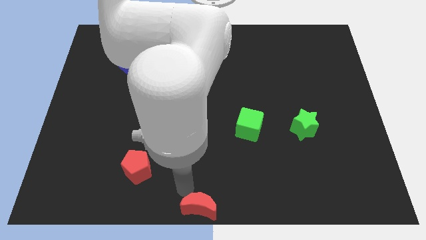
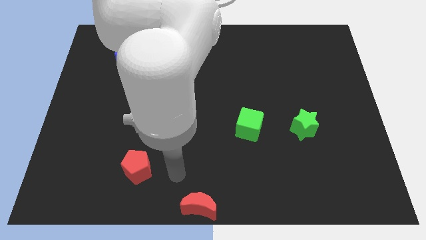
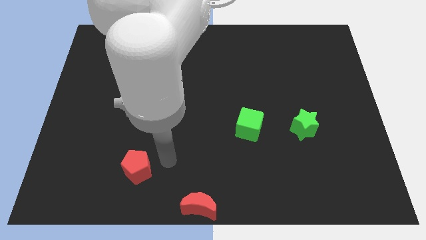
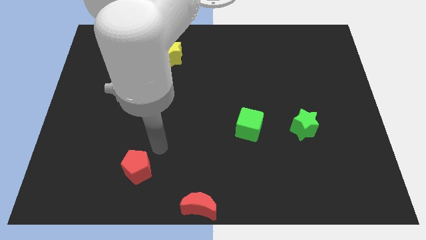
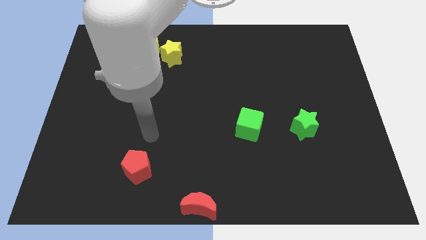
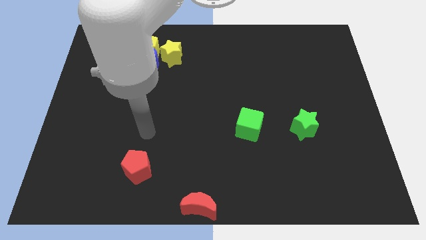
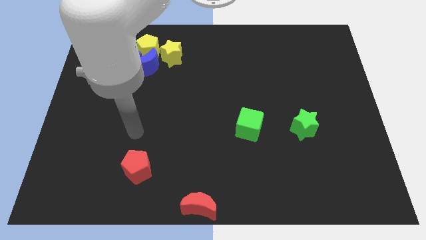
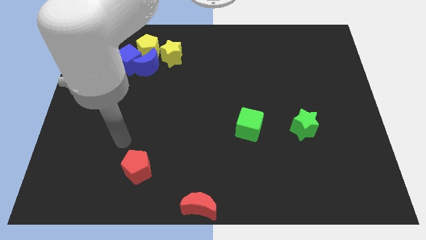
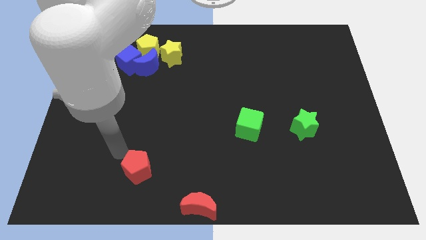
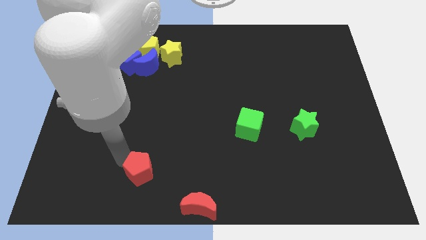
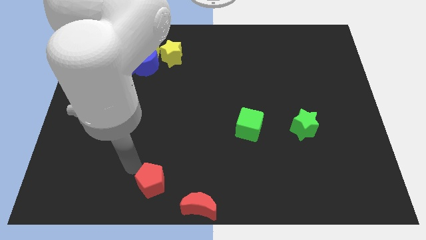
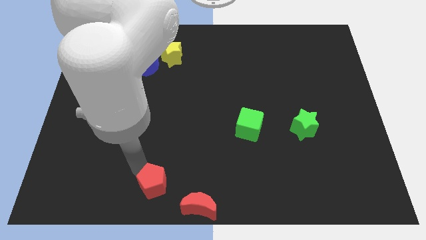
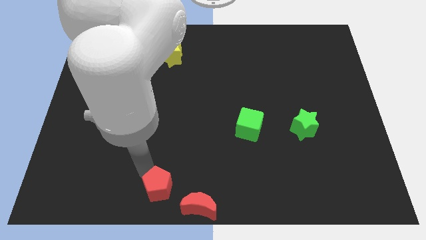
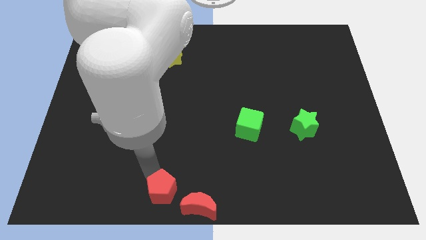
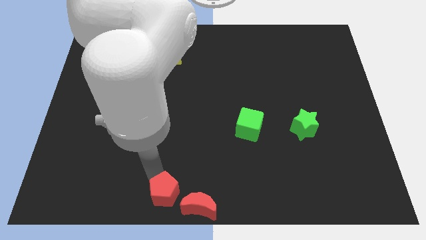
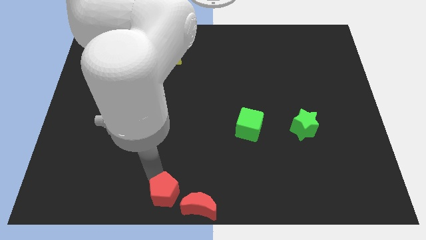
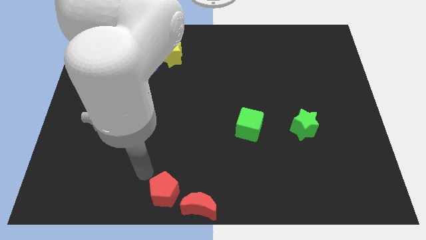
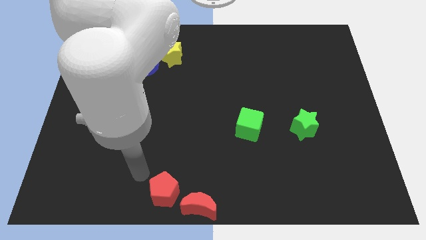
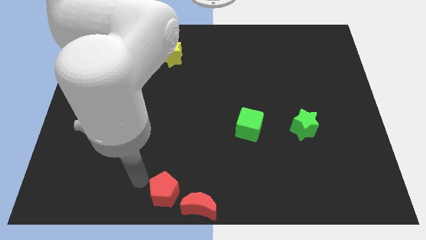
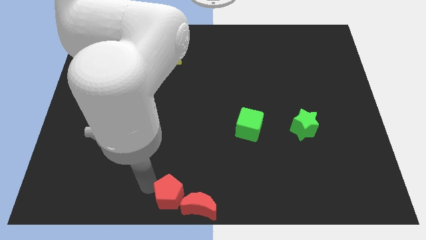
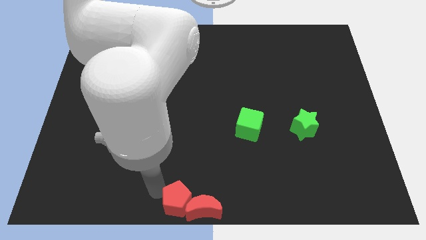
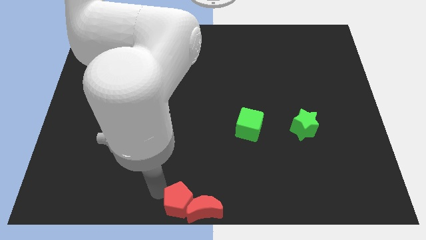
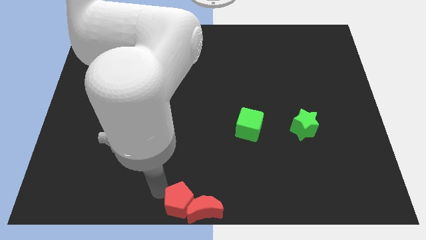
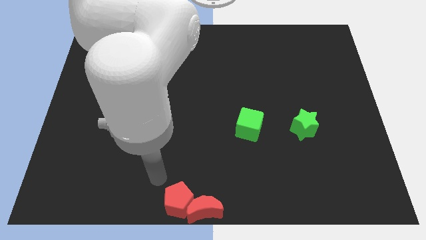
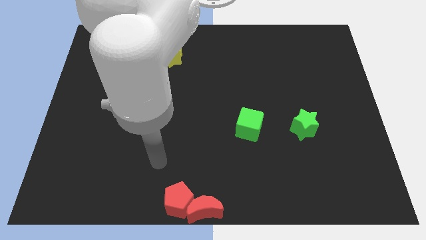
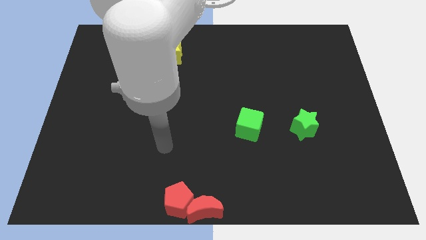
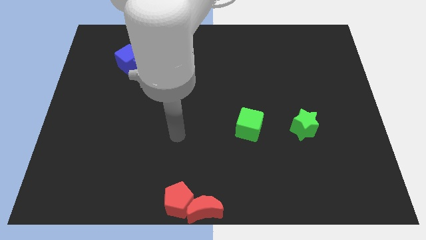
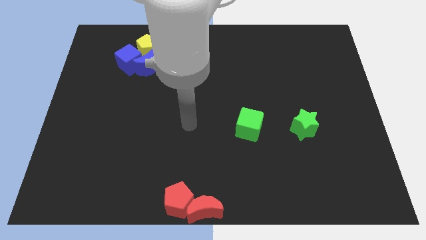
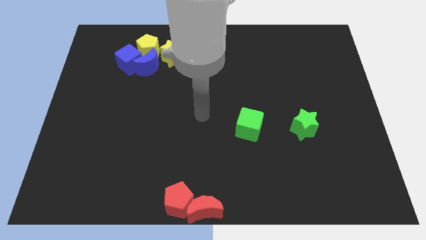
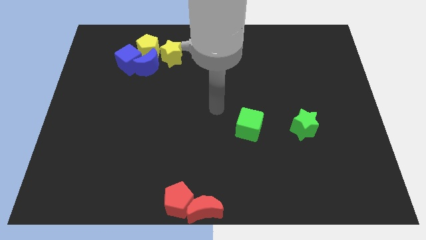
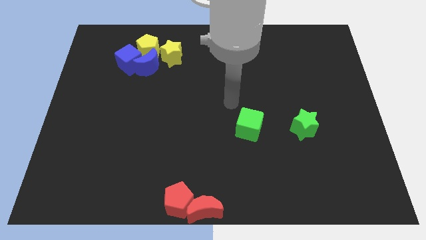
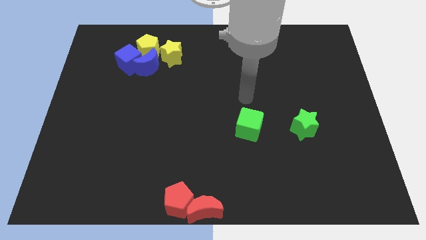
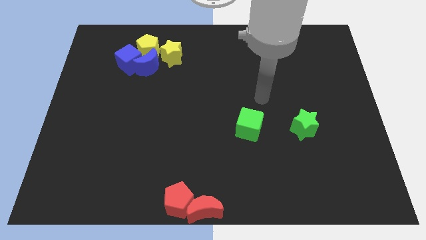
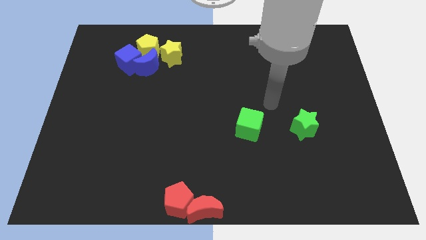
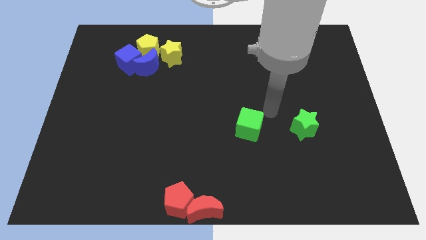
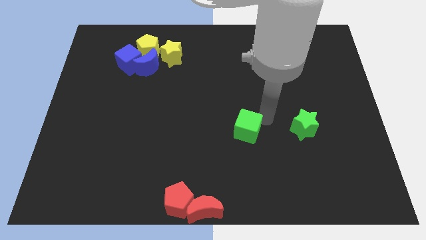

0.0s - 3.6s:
push the red pentagon left to the red crescent

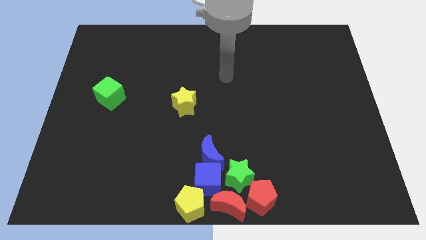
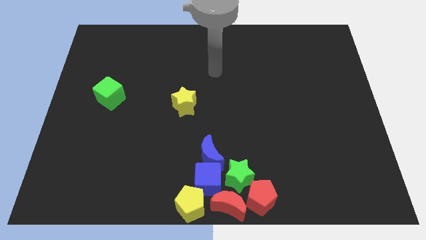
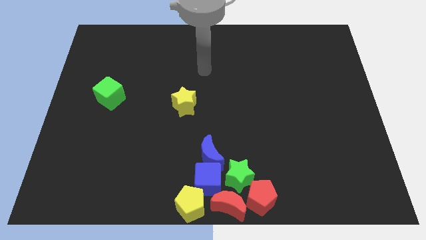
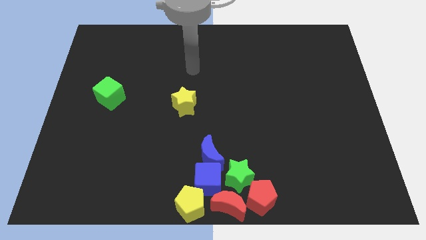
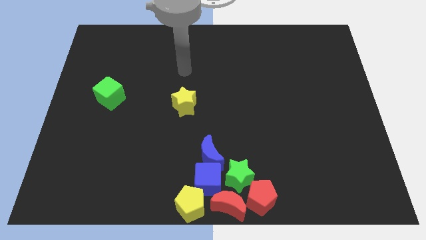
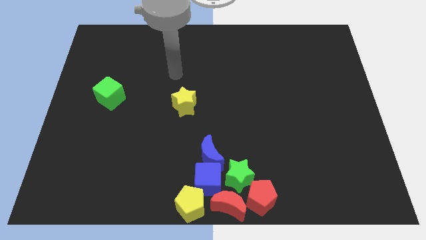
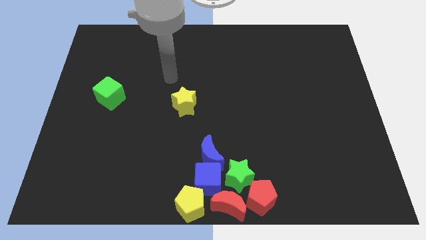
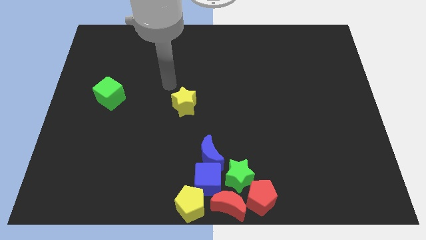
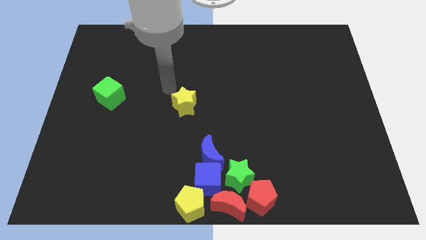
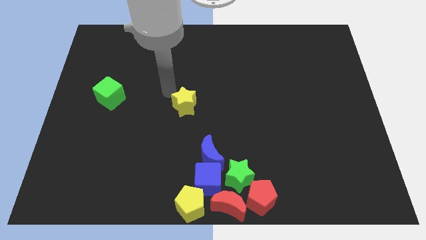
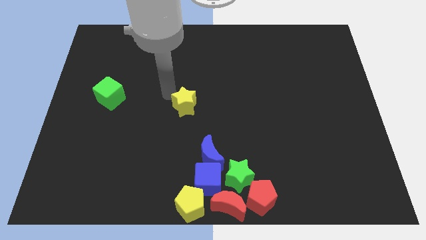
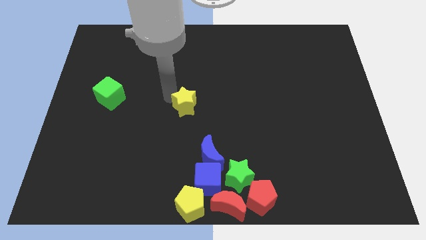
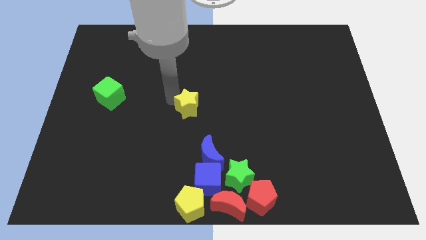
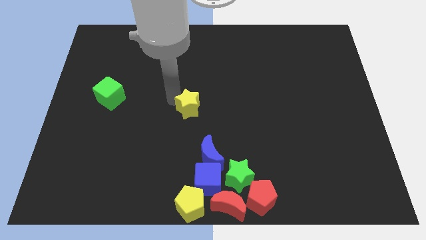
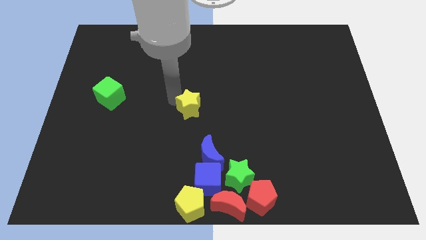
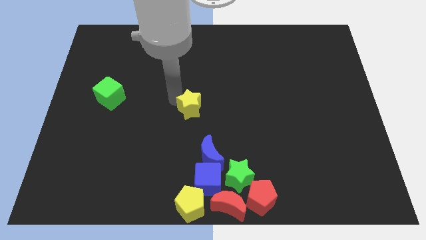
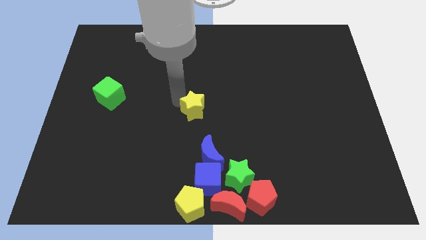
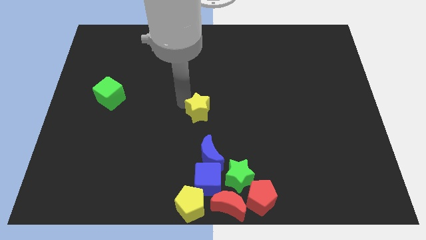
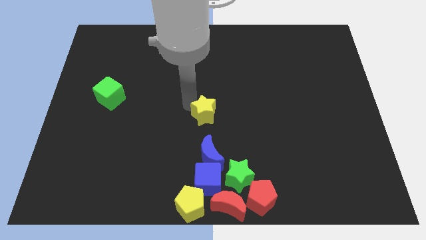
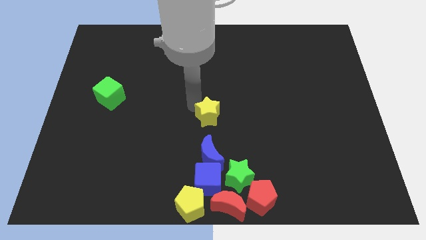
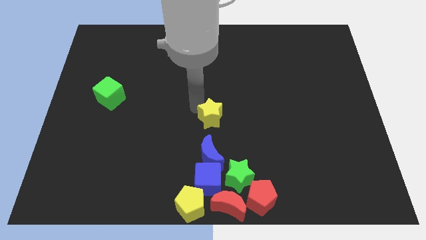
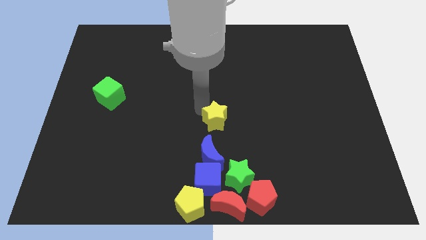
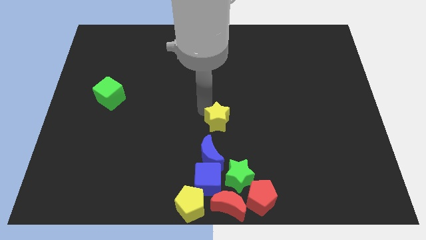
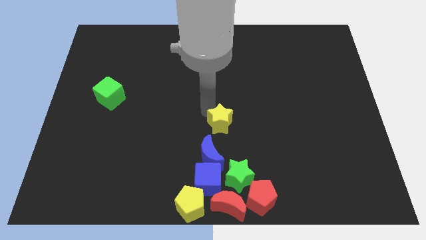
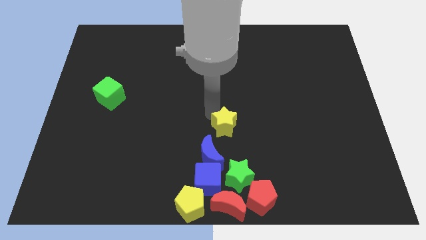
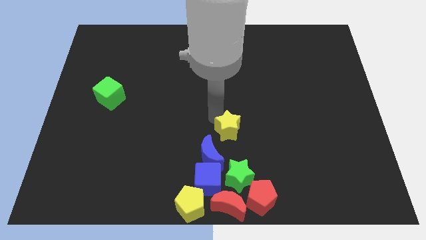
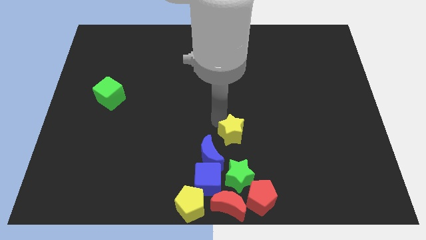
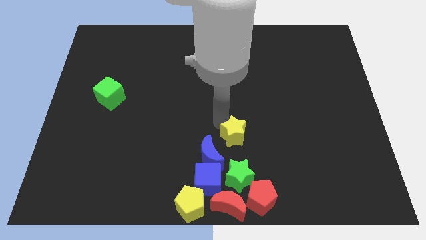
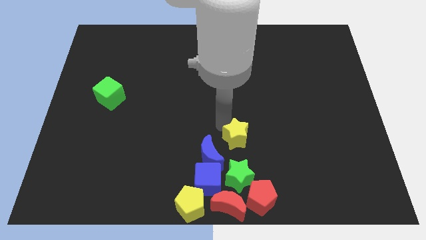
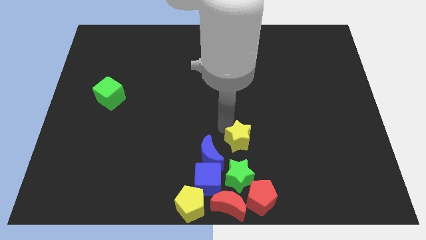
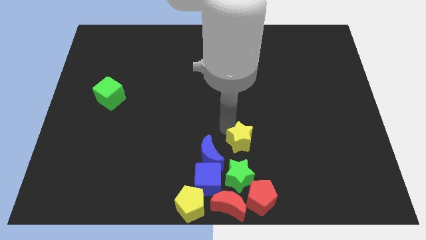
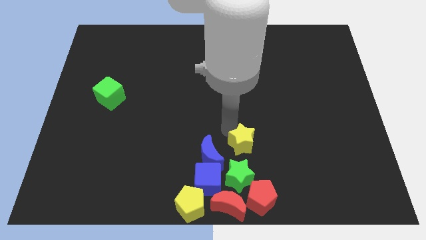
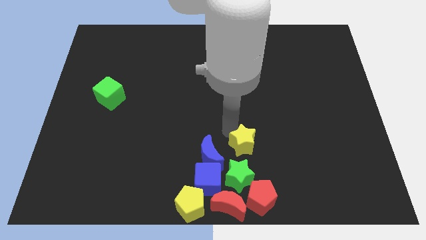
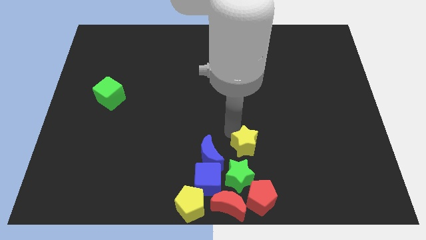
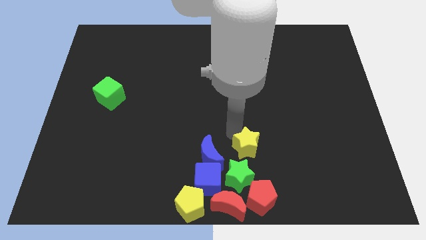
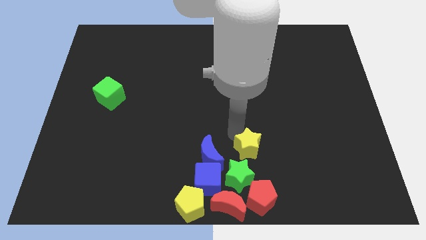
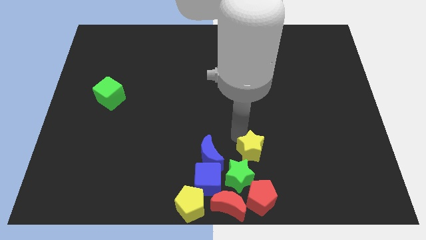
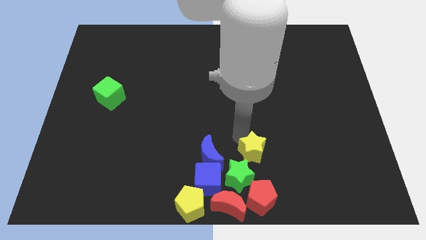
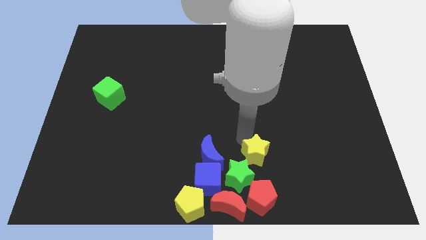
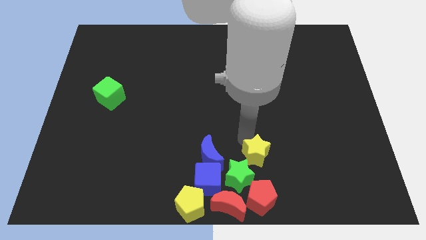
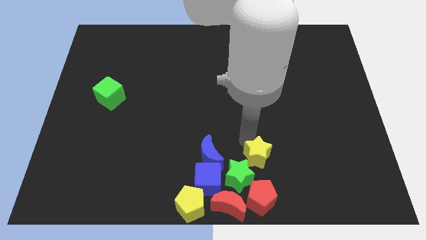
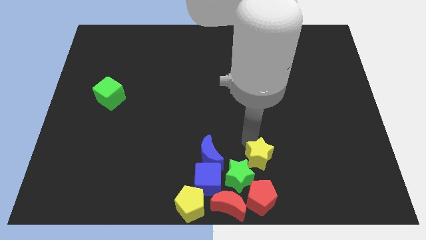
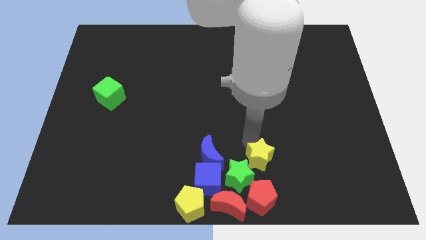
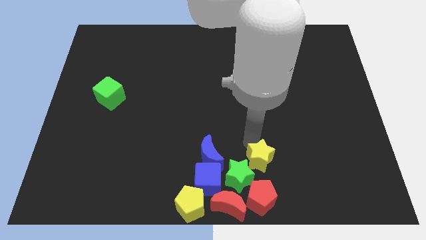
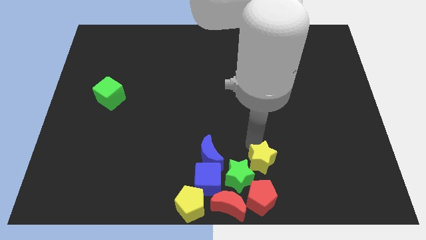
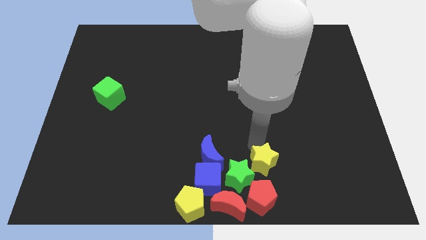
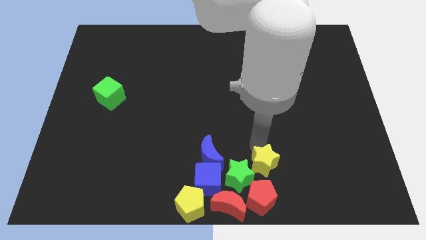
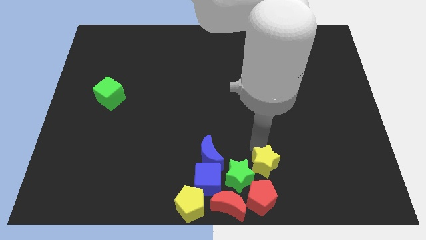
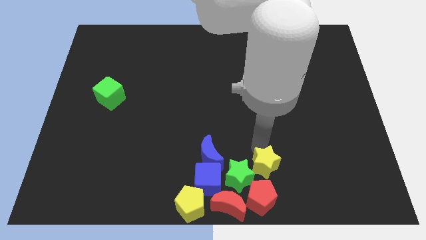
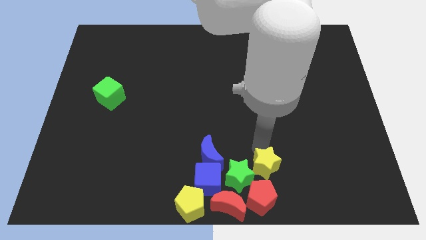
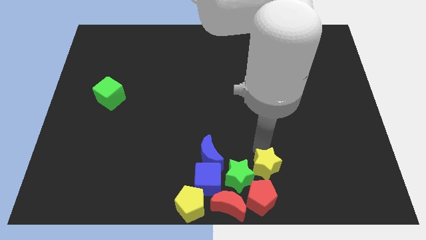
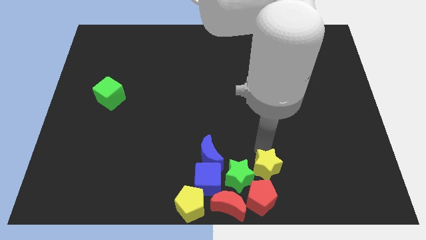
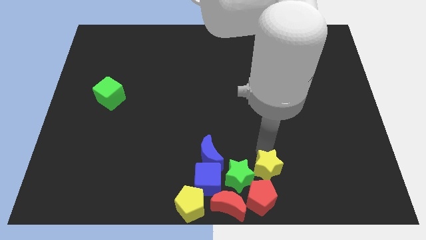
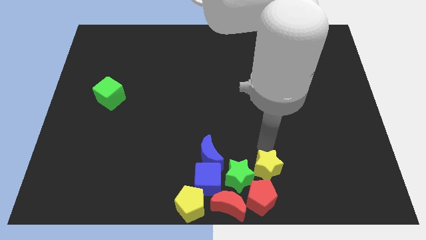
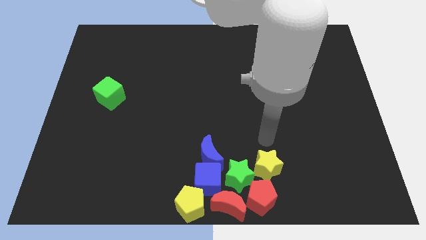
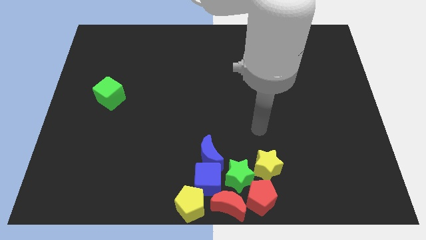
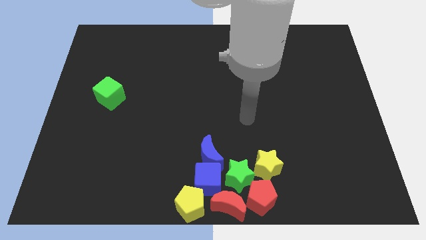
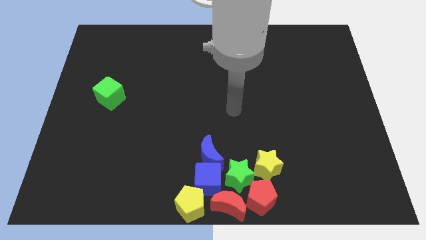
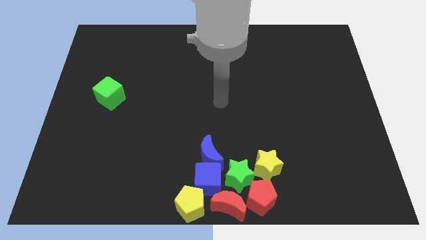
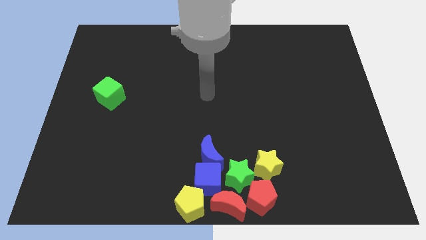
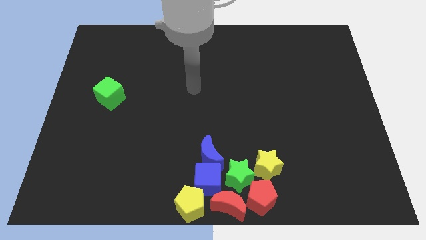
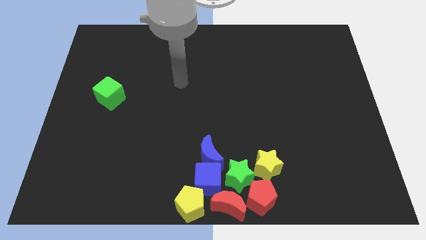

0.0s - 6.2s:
move the yellow star to the right of the green star
